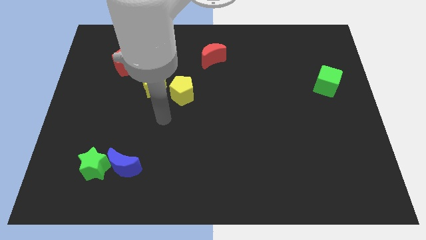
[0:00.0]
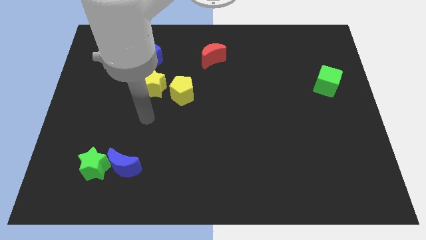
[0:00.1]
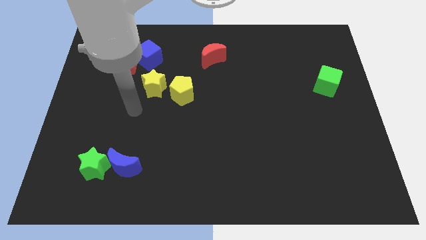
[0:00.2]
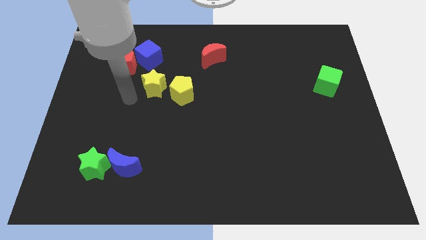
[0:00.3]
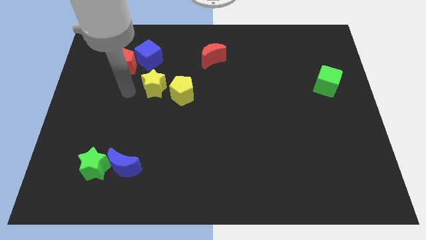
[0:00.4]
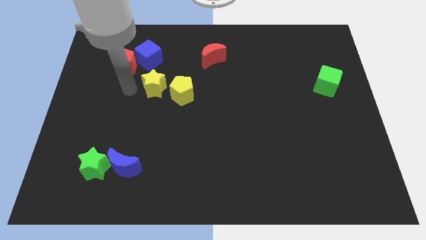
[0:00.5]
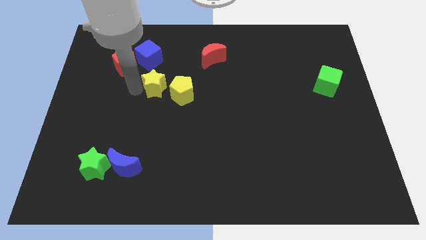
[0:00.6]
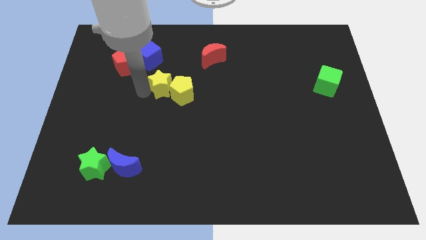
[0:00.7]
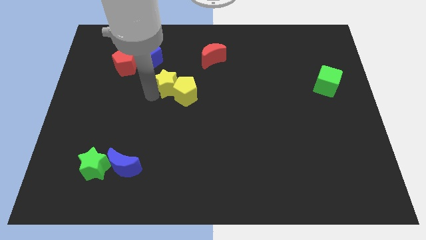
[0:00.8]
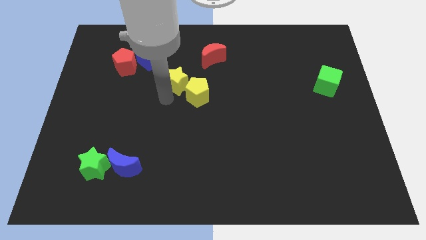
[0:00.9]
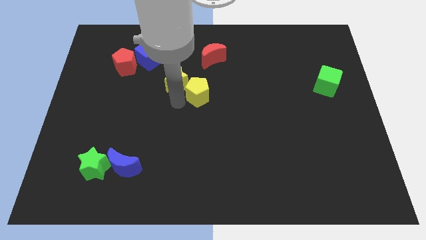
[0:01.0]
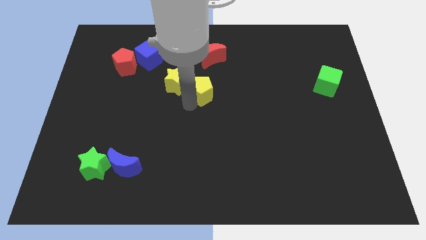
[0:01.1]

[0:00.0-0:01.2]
push the yellow star into the yellow pentagon

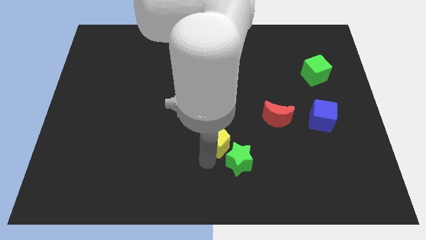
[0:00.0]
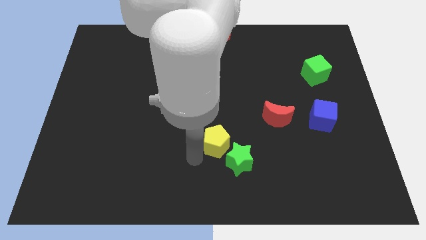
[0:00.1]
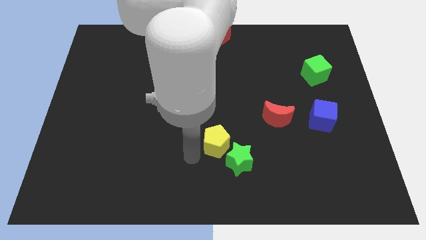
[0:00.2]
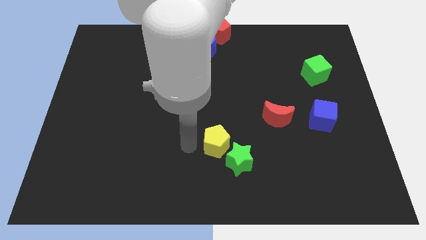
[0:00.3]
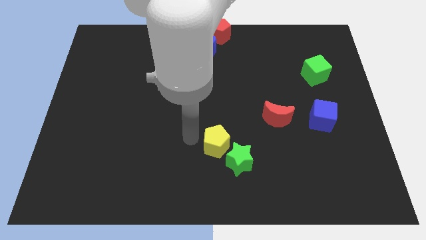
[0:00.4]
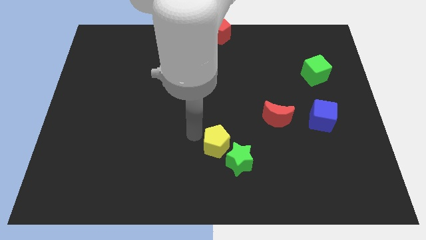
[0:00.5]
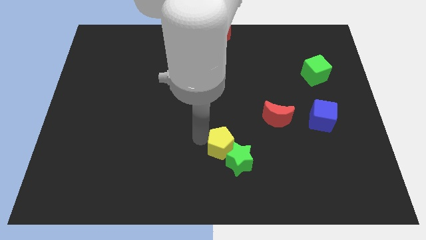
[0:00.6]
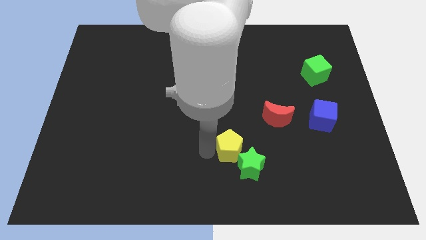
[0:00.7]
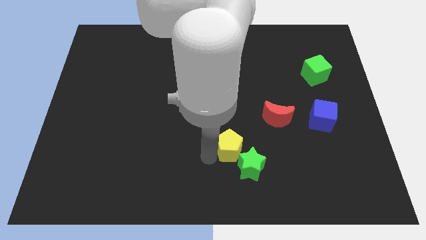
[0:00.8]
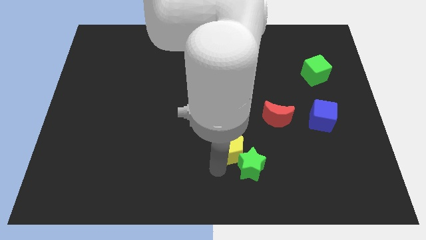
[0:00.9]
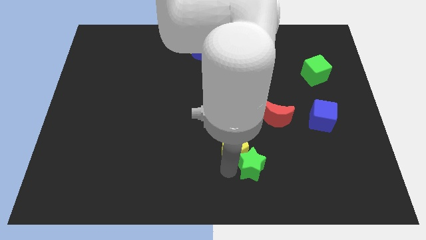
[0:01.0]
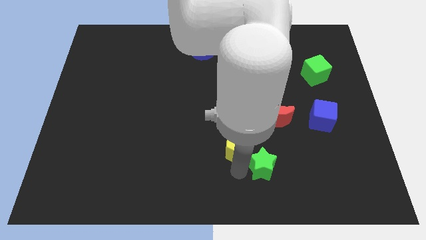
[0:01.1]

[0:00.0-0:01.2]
push the yellow pentagon into the green star

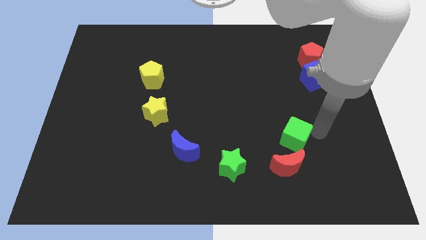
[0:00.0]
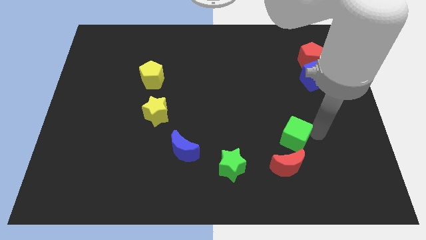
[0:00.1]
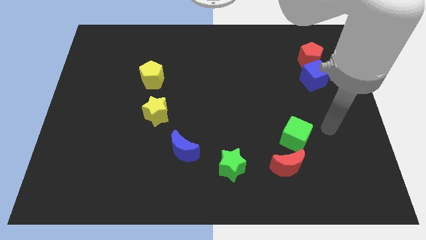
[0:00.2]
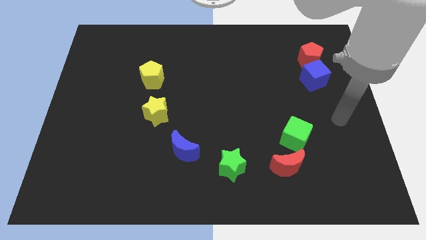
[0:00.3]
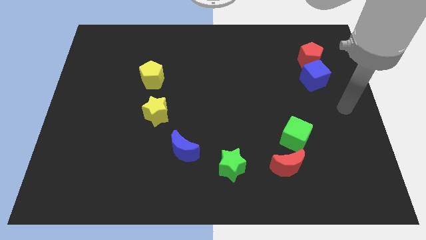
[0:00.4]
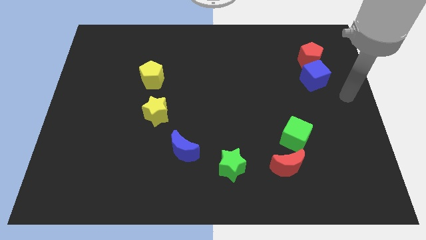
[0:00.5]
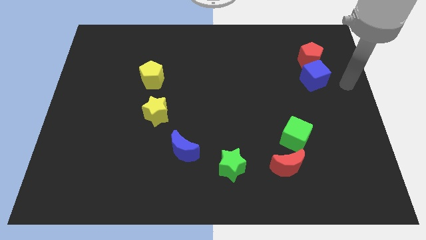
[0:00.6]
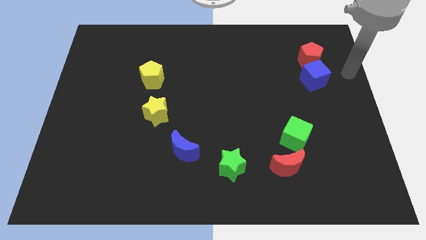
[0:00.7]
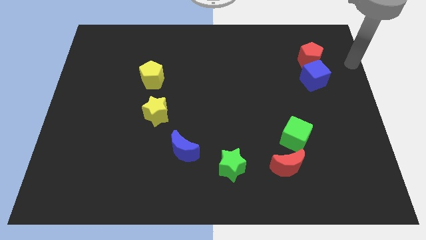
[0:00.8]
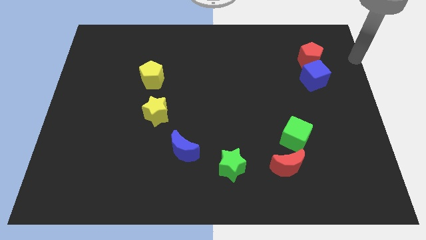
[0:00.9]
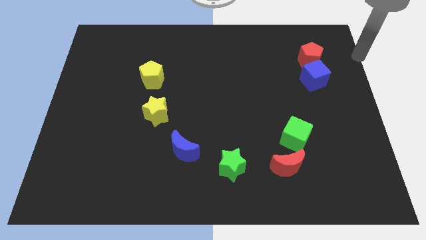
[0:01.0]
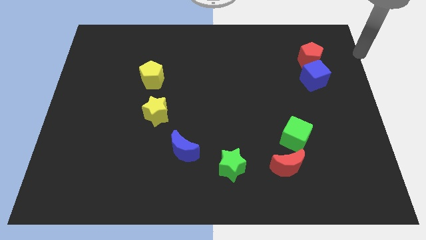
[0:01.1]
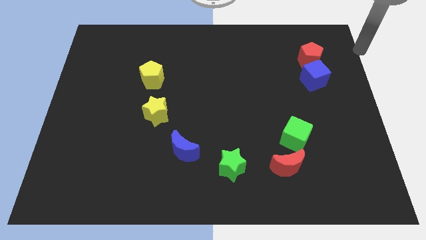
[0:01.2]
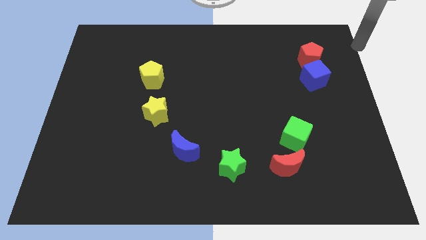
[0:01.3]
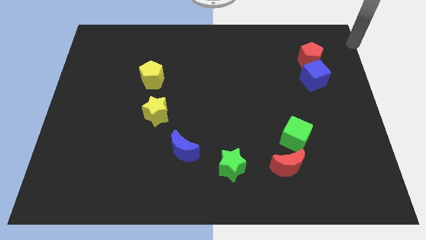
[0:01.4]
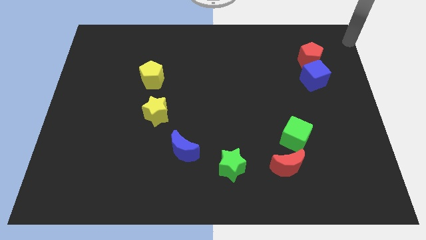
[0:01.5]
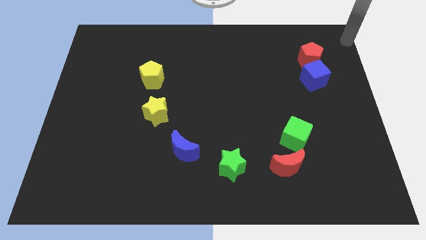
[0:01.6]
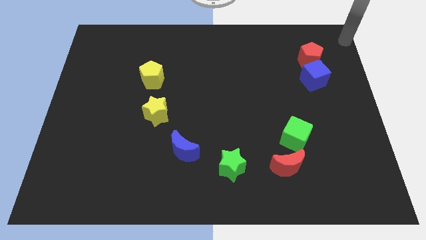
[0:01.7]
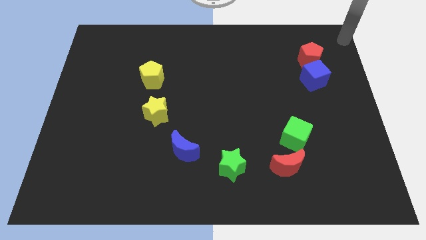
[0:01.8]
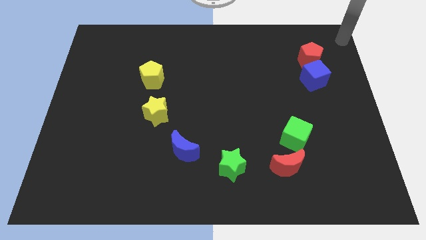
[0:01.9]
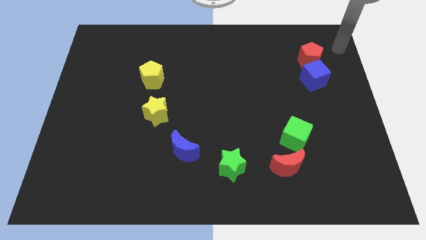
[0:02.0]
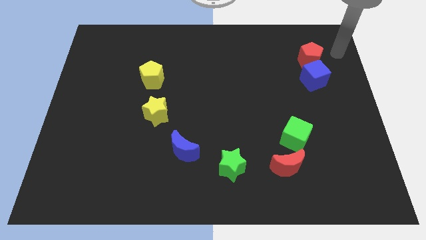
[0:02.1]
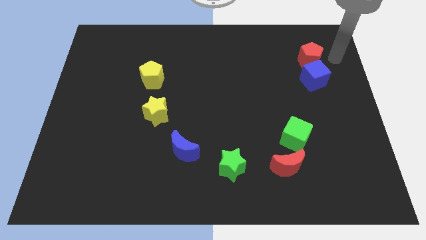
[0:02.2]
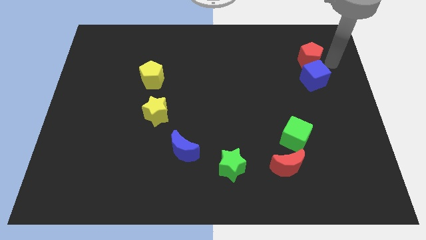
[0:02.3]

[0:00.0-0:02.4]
move your arm away from the green star

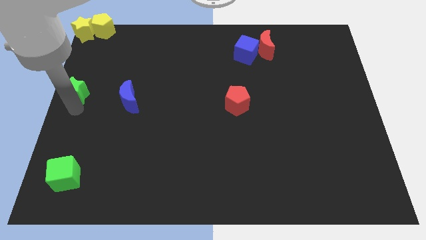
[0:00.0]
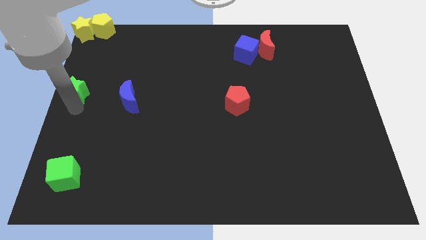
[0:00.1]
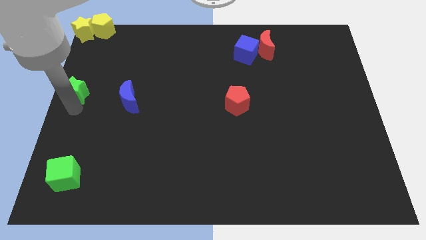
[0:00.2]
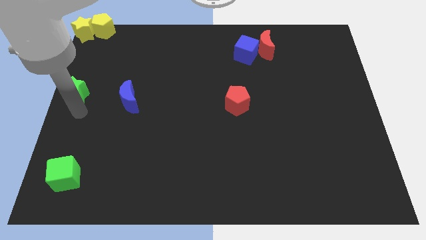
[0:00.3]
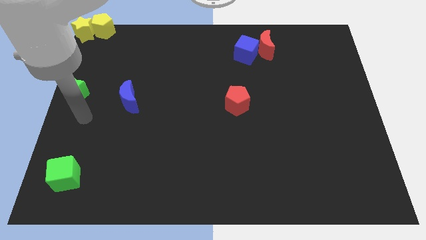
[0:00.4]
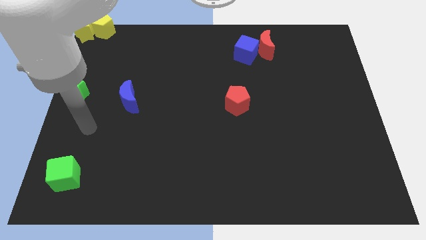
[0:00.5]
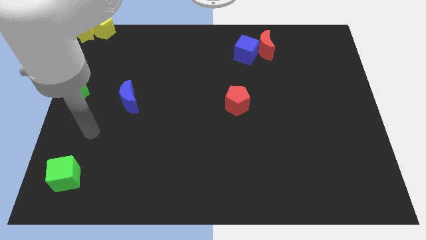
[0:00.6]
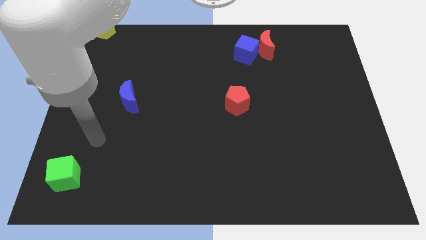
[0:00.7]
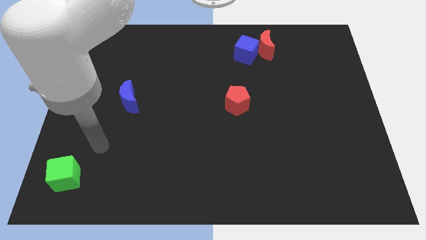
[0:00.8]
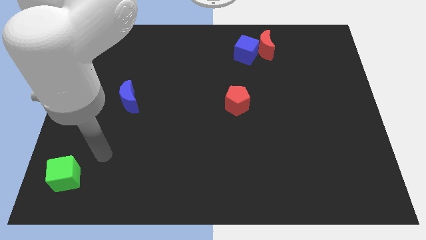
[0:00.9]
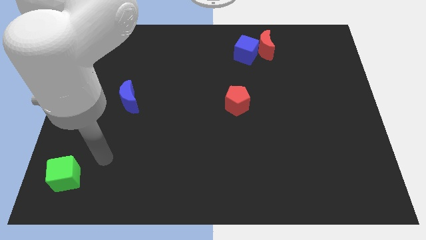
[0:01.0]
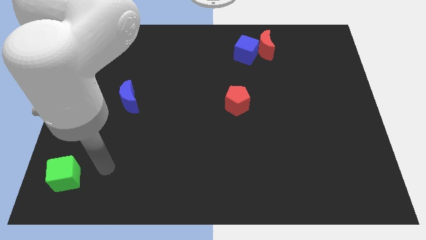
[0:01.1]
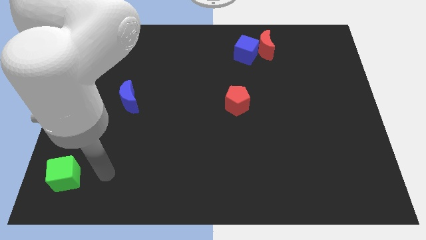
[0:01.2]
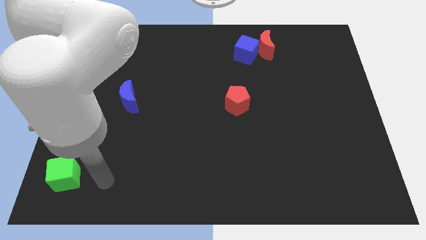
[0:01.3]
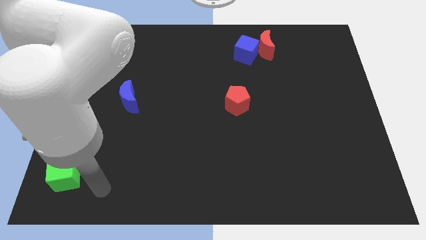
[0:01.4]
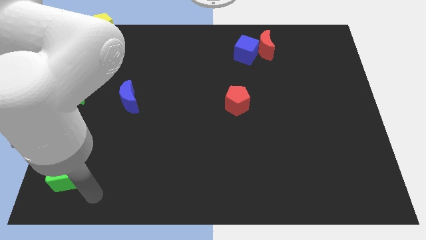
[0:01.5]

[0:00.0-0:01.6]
point your arm at the bottom right side of green cube

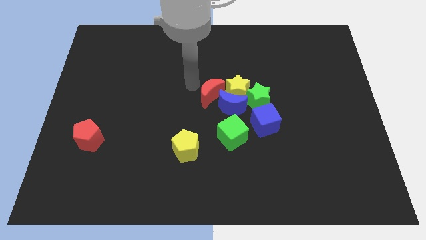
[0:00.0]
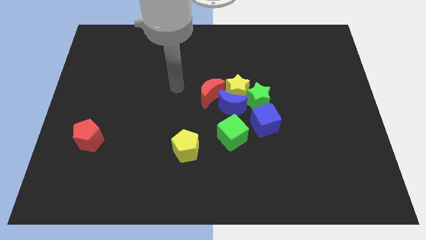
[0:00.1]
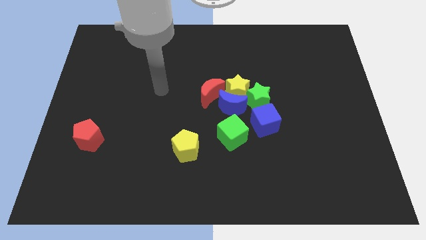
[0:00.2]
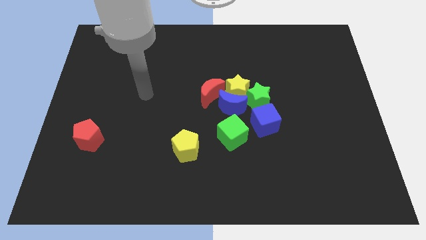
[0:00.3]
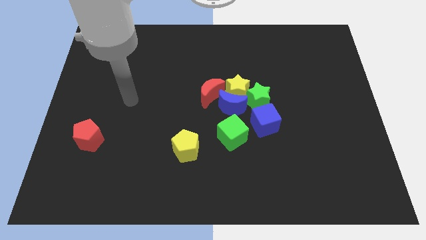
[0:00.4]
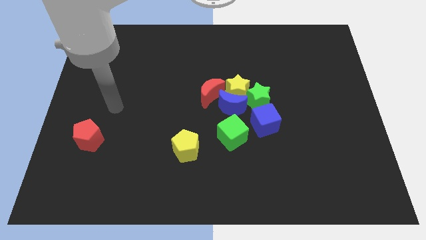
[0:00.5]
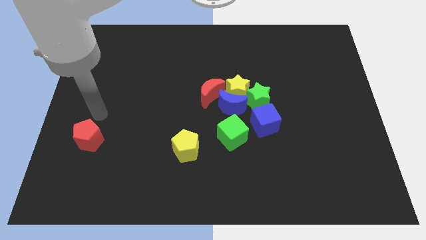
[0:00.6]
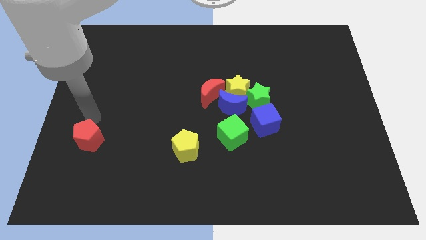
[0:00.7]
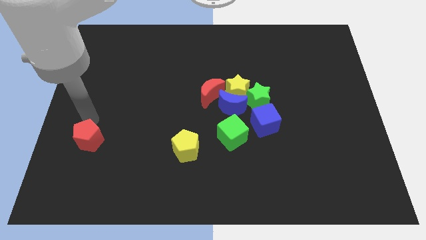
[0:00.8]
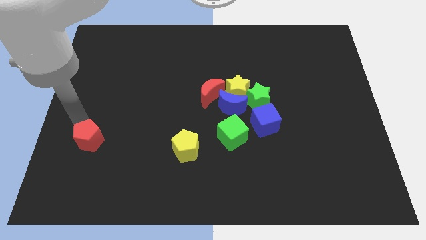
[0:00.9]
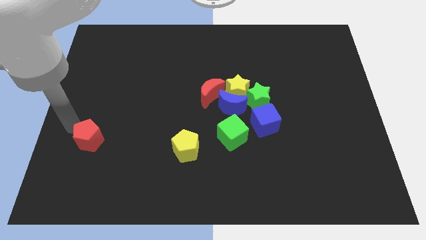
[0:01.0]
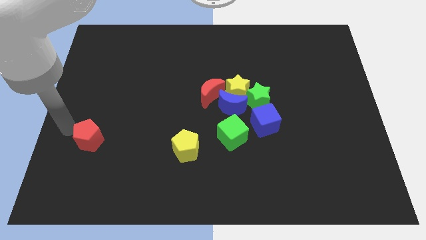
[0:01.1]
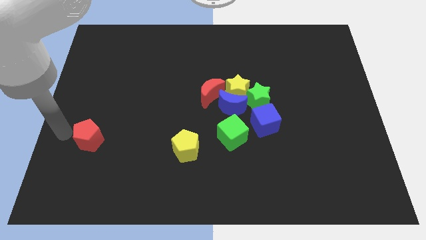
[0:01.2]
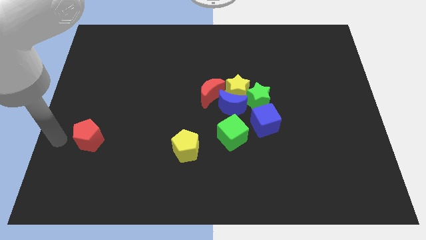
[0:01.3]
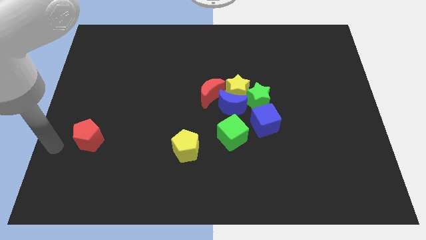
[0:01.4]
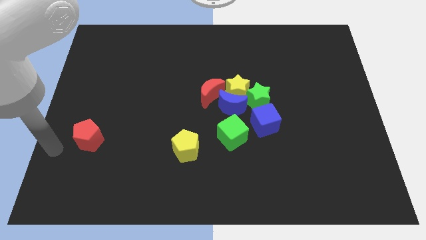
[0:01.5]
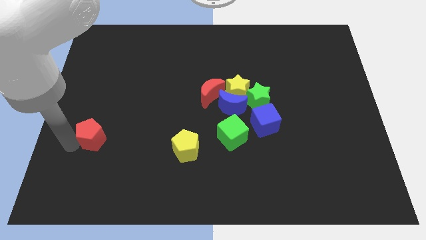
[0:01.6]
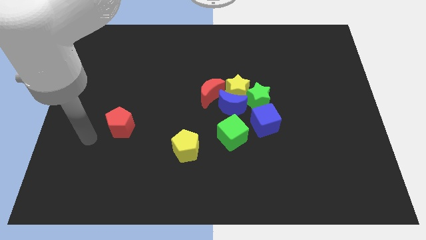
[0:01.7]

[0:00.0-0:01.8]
move your arm into the red pentagon

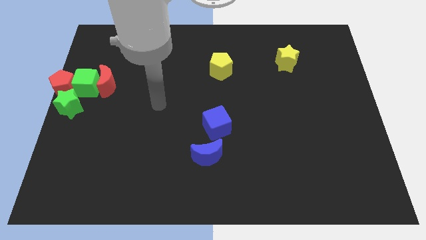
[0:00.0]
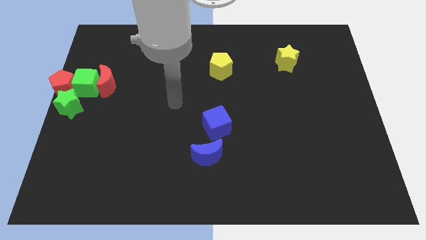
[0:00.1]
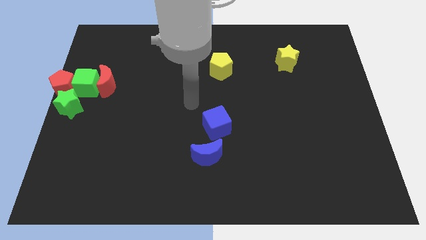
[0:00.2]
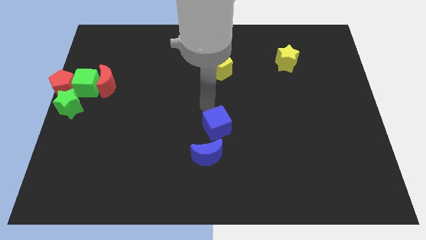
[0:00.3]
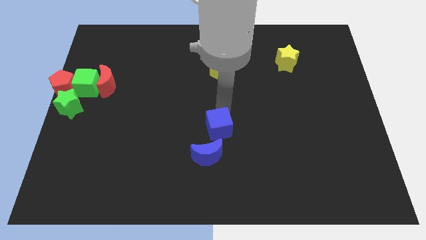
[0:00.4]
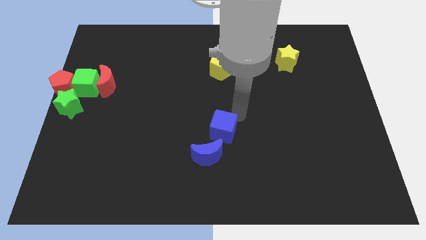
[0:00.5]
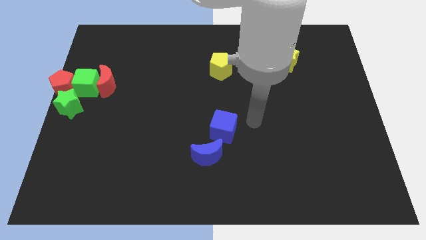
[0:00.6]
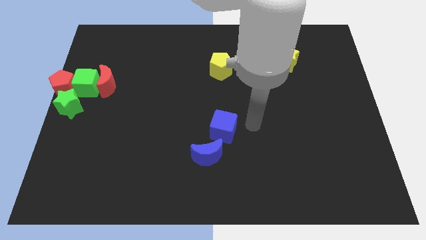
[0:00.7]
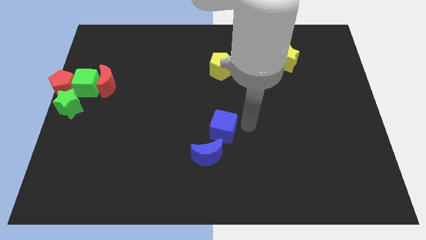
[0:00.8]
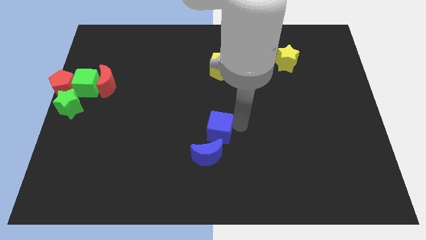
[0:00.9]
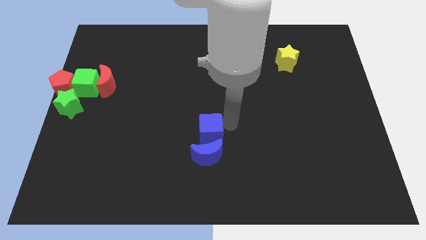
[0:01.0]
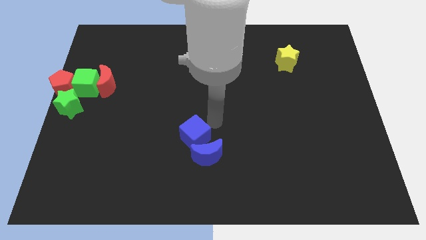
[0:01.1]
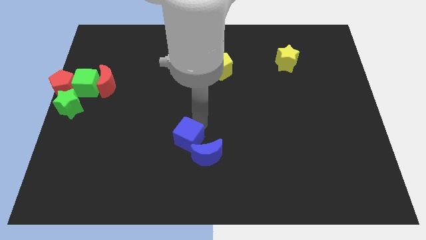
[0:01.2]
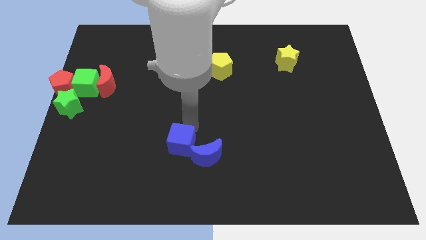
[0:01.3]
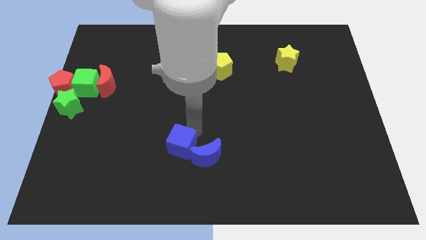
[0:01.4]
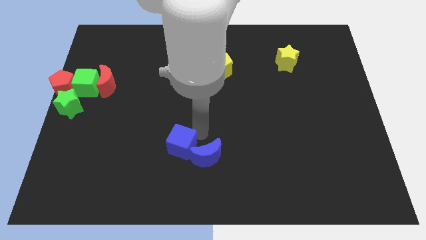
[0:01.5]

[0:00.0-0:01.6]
put the blue cube left to the blue moon
